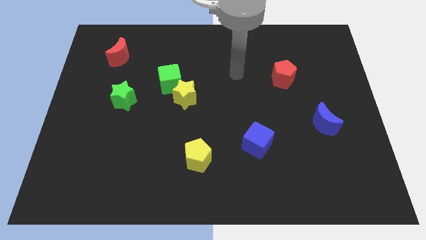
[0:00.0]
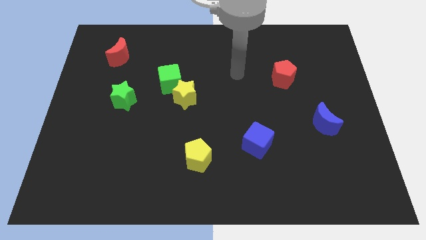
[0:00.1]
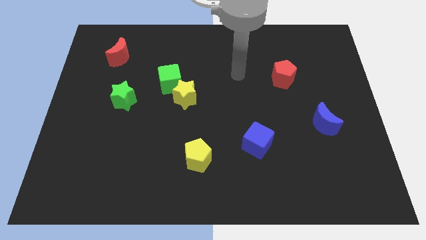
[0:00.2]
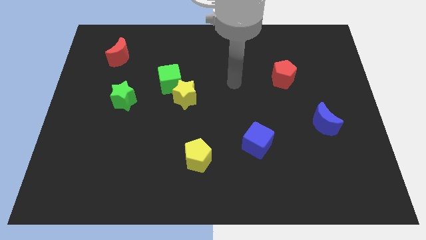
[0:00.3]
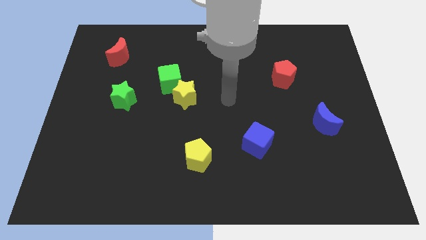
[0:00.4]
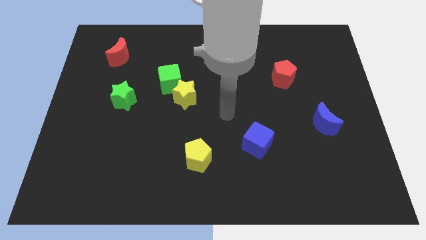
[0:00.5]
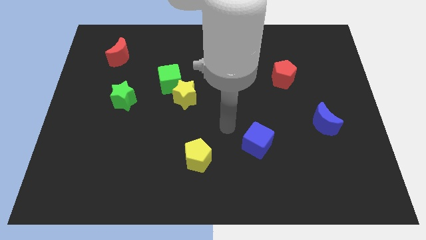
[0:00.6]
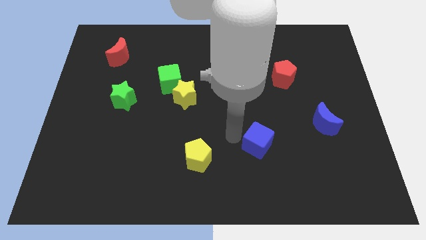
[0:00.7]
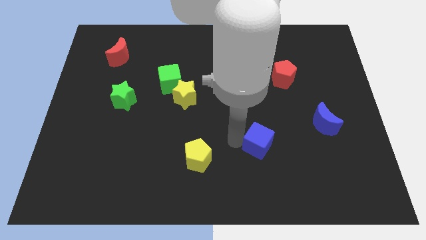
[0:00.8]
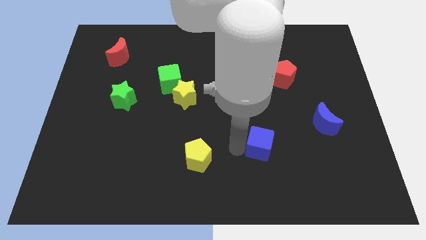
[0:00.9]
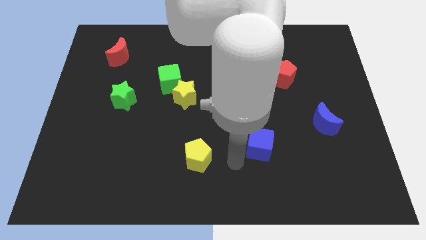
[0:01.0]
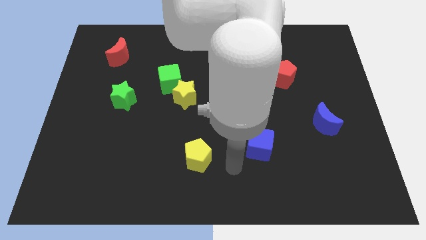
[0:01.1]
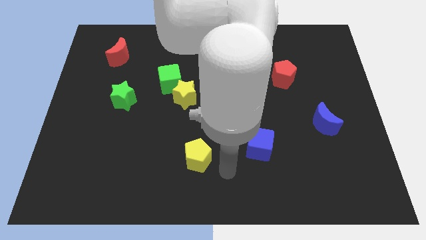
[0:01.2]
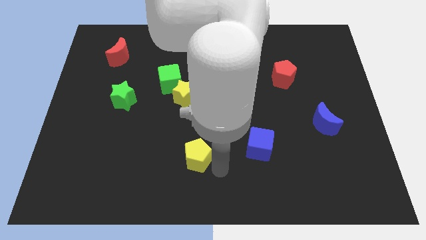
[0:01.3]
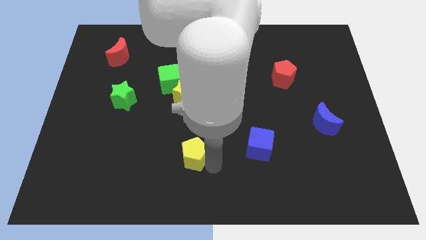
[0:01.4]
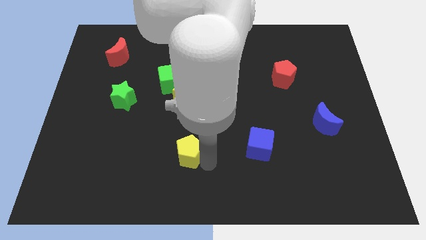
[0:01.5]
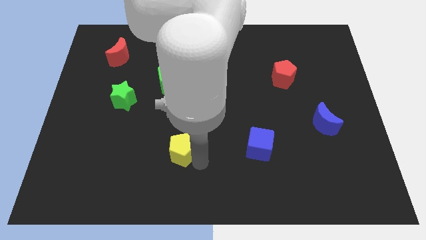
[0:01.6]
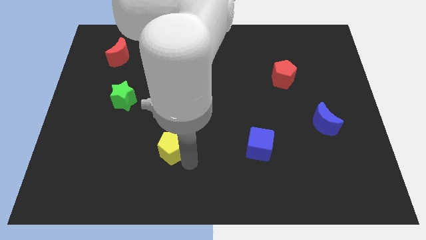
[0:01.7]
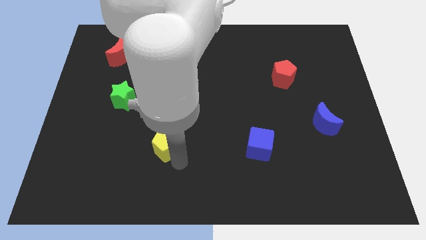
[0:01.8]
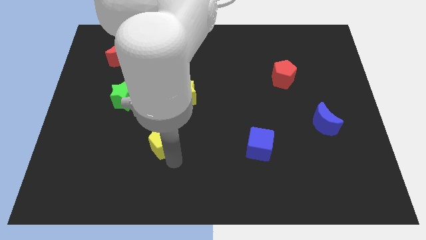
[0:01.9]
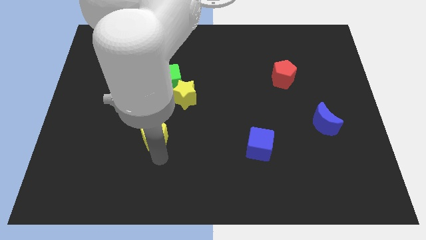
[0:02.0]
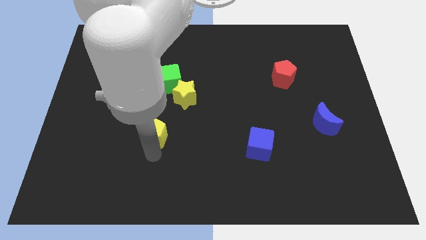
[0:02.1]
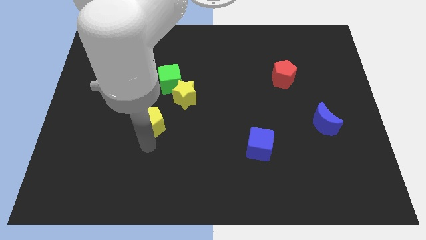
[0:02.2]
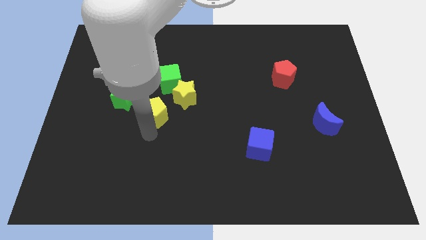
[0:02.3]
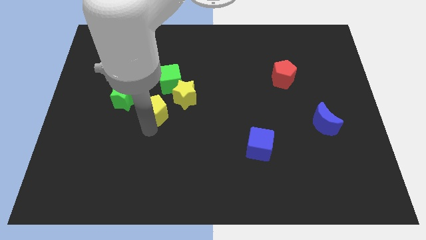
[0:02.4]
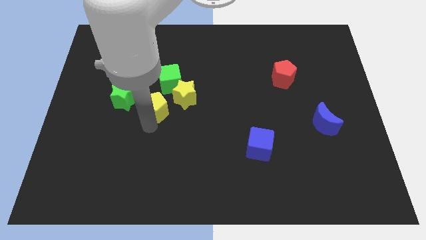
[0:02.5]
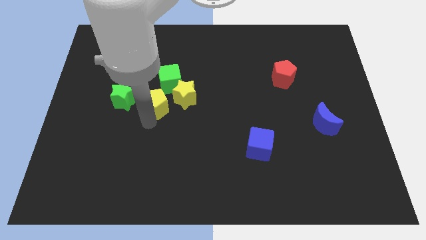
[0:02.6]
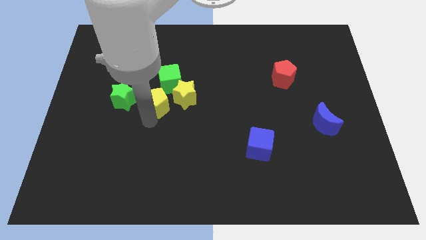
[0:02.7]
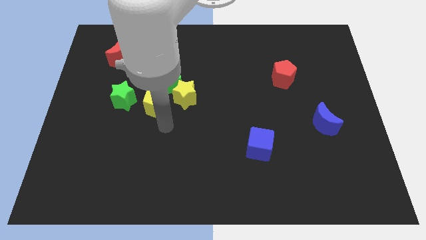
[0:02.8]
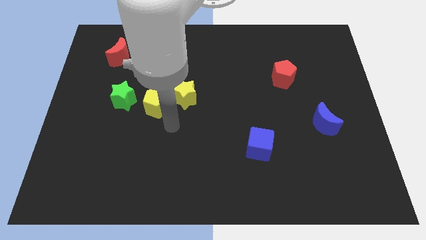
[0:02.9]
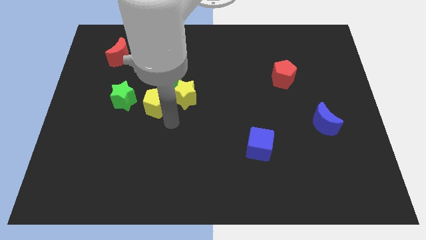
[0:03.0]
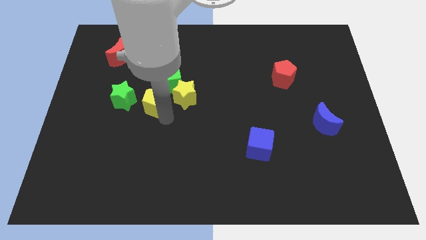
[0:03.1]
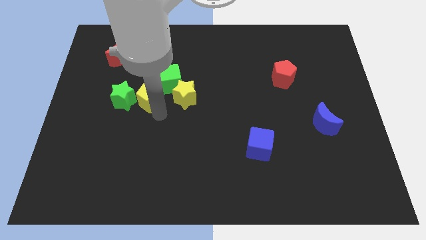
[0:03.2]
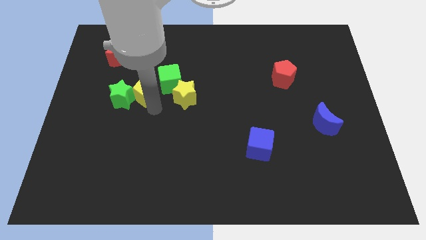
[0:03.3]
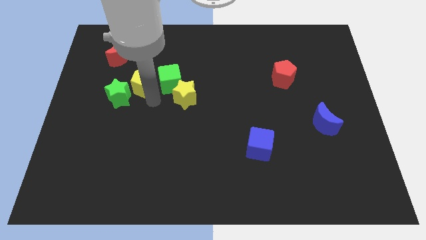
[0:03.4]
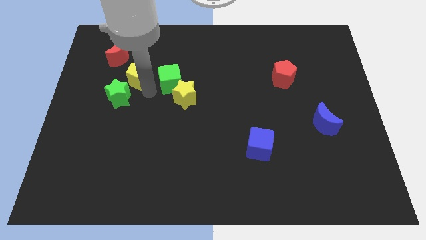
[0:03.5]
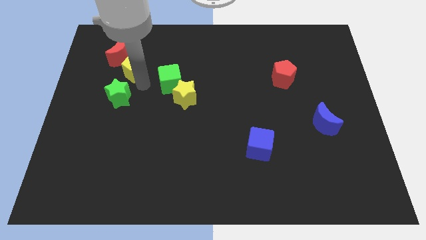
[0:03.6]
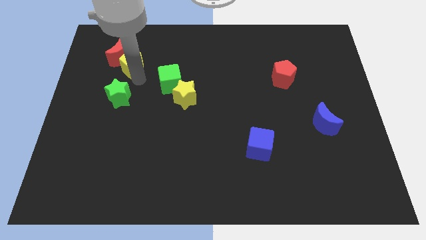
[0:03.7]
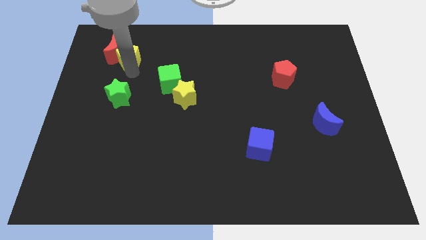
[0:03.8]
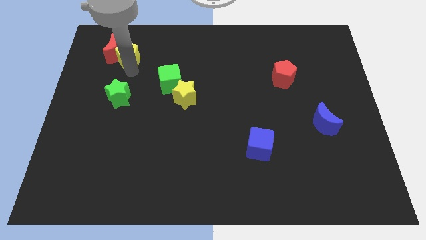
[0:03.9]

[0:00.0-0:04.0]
move the yellow pentagon towards the red moon

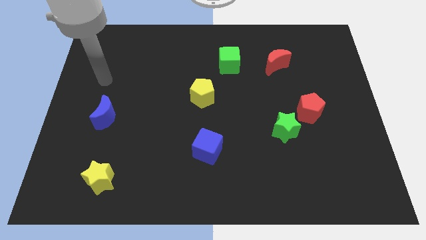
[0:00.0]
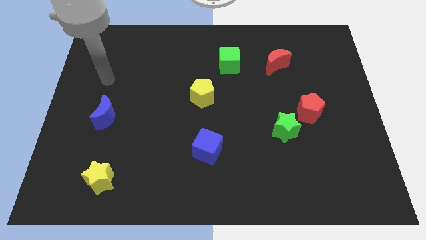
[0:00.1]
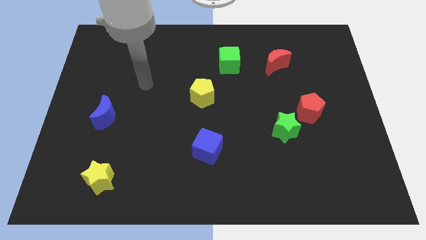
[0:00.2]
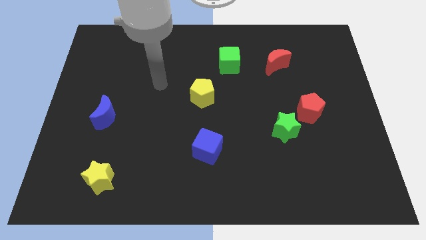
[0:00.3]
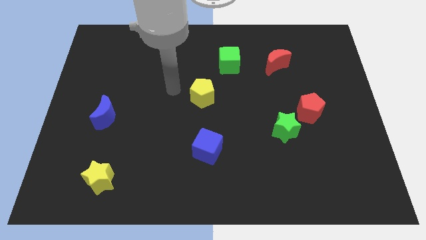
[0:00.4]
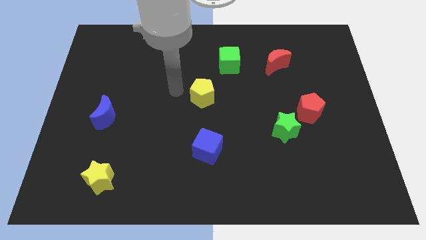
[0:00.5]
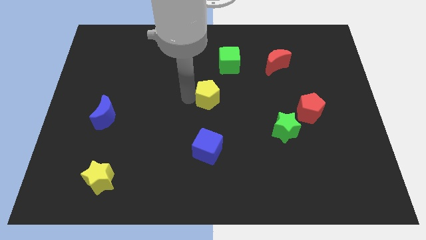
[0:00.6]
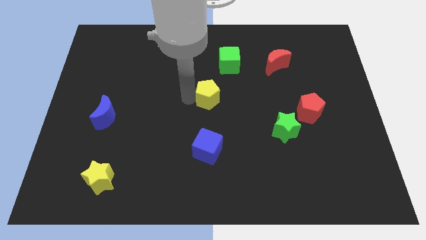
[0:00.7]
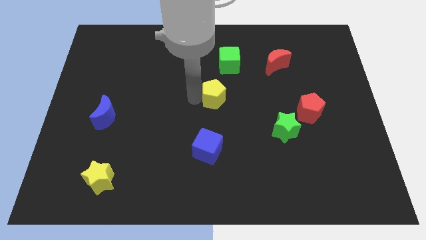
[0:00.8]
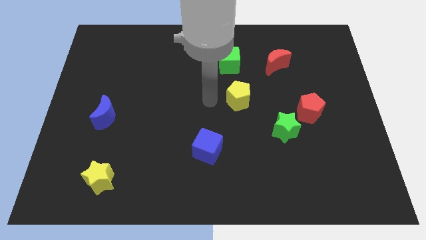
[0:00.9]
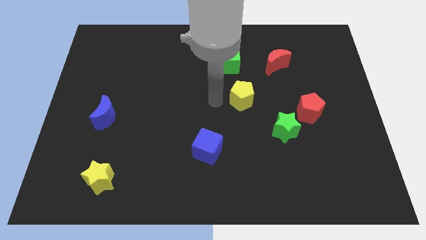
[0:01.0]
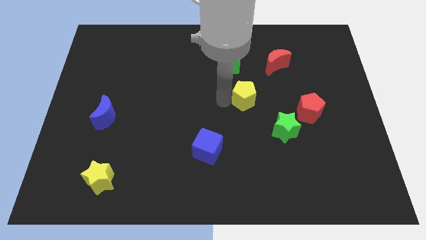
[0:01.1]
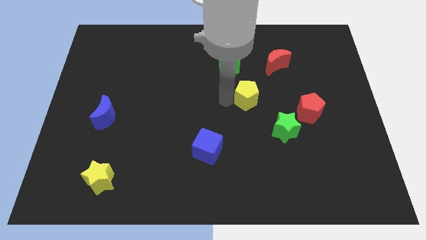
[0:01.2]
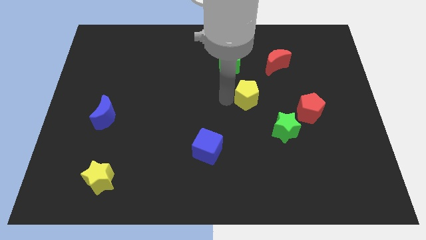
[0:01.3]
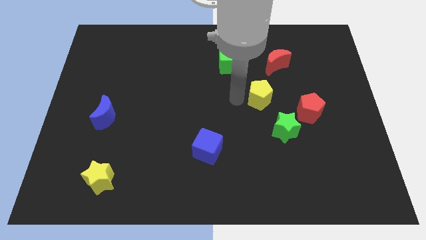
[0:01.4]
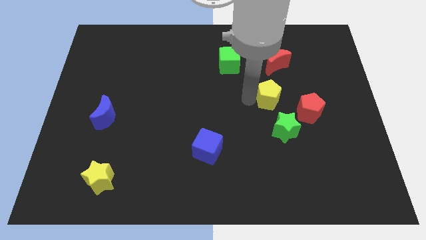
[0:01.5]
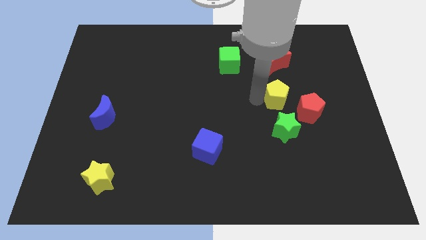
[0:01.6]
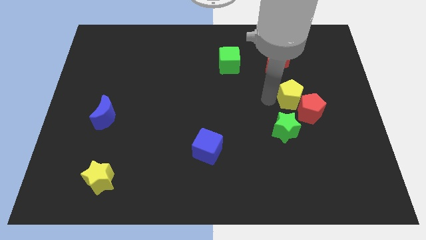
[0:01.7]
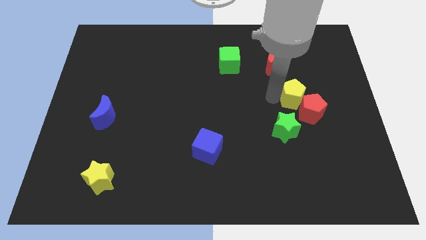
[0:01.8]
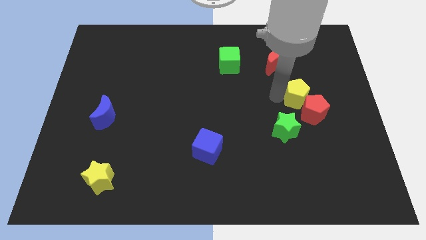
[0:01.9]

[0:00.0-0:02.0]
slide the yellow pentagon next to the red pentagon

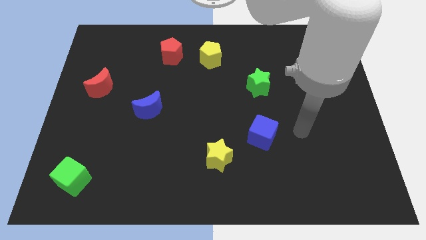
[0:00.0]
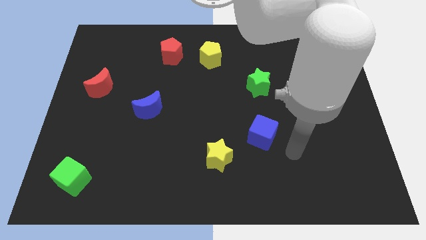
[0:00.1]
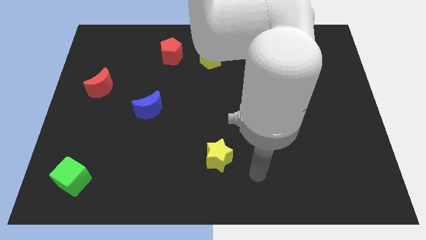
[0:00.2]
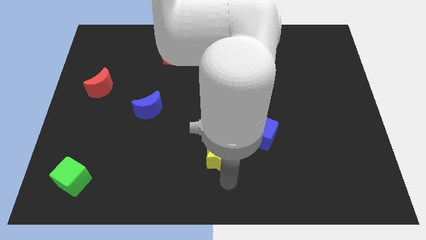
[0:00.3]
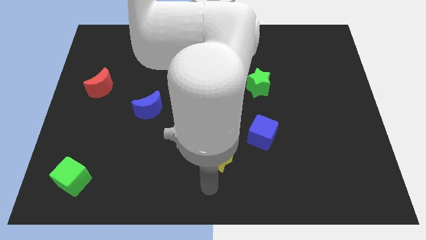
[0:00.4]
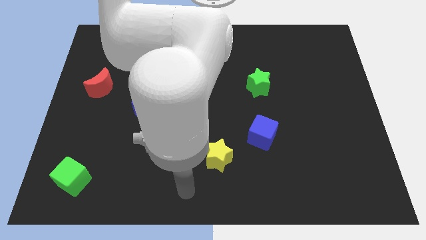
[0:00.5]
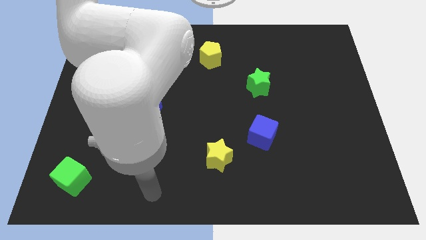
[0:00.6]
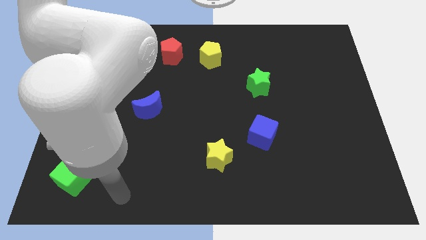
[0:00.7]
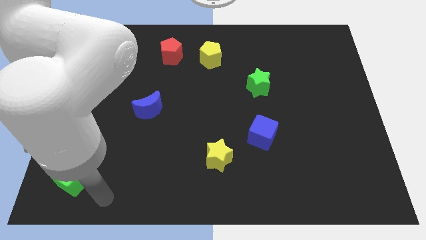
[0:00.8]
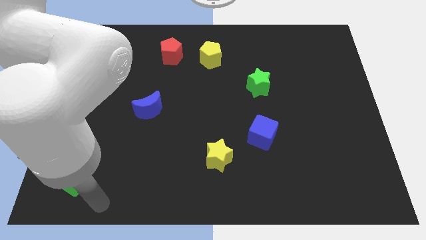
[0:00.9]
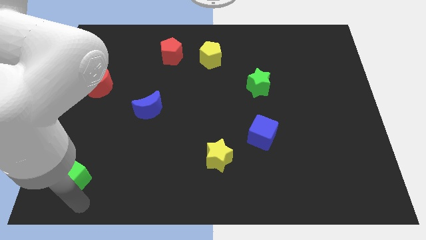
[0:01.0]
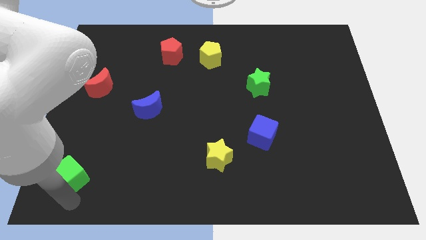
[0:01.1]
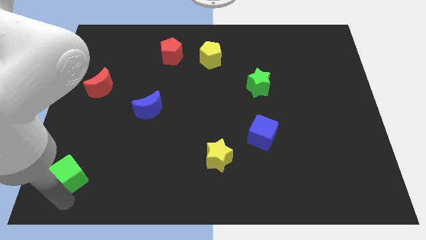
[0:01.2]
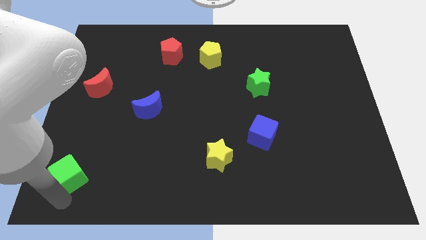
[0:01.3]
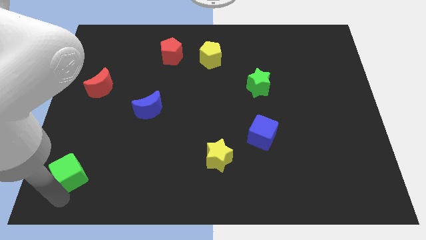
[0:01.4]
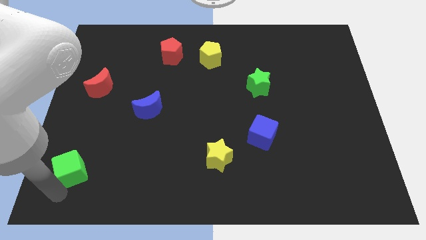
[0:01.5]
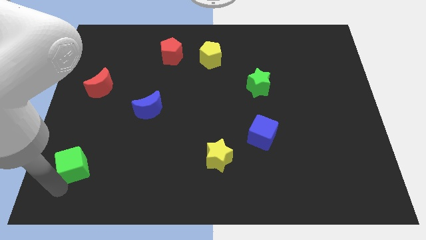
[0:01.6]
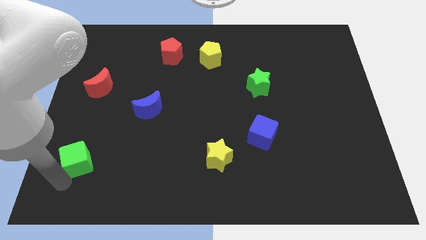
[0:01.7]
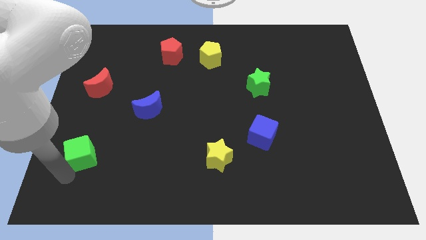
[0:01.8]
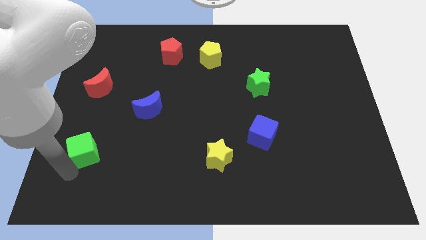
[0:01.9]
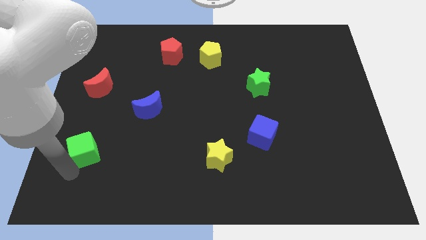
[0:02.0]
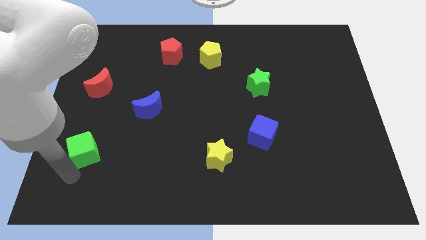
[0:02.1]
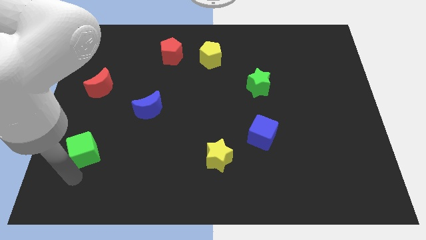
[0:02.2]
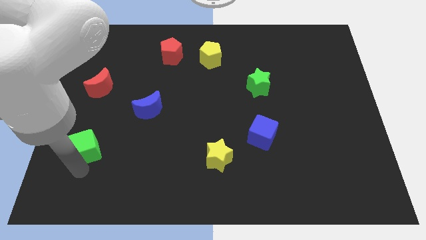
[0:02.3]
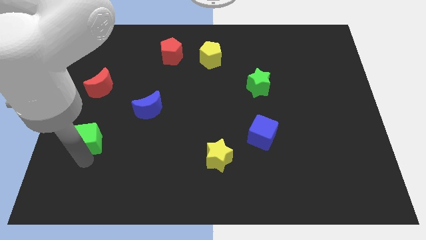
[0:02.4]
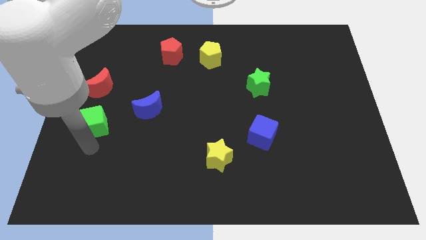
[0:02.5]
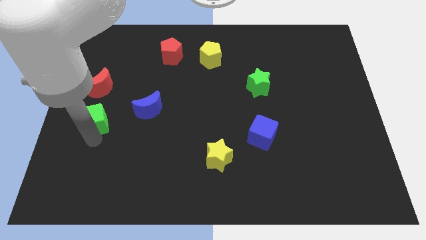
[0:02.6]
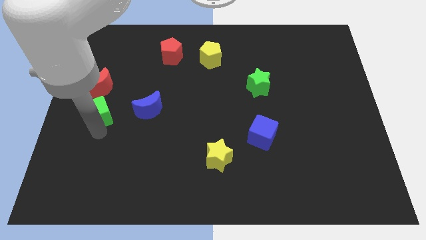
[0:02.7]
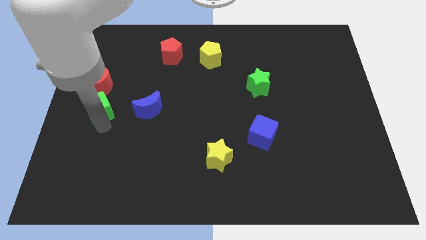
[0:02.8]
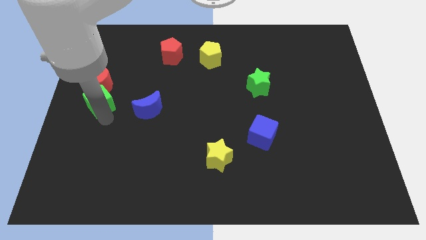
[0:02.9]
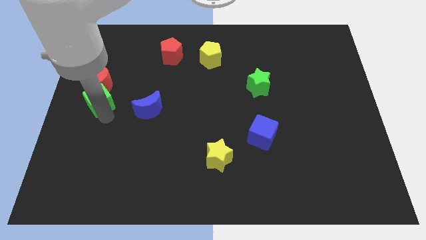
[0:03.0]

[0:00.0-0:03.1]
slide the green cube towards the red moon
